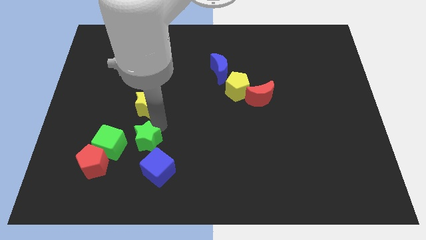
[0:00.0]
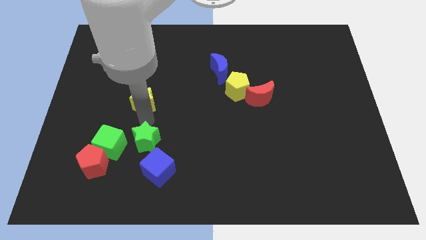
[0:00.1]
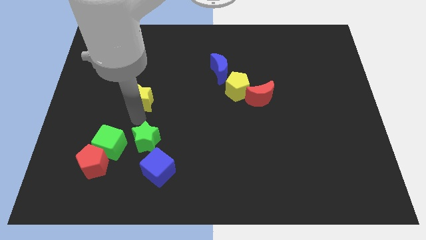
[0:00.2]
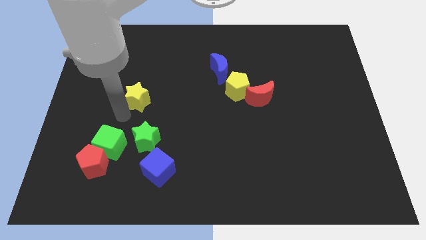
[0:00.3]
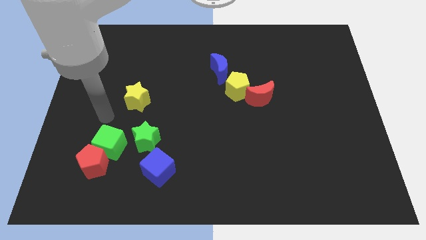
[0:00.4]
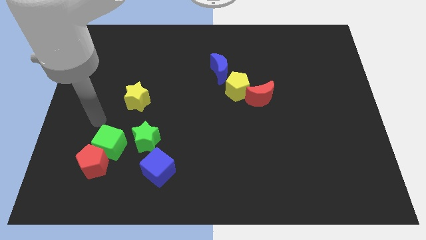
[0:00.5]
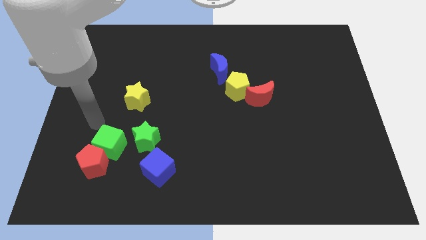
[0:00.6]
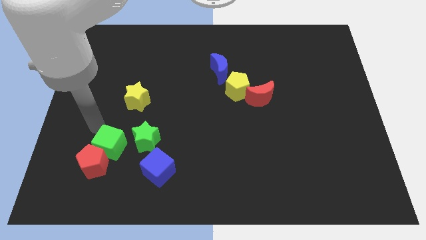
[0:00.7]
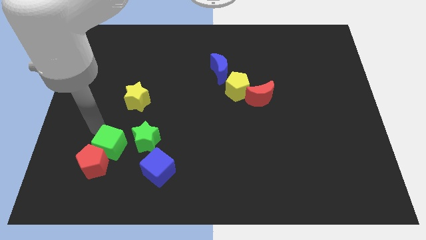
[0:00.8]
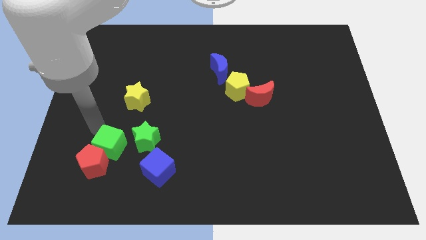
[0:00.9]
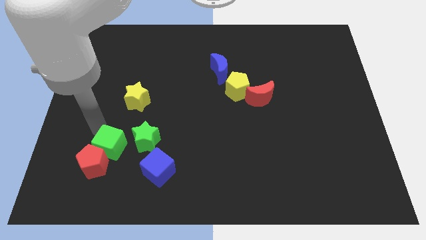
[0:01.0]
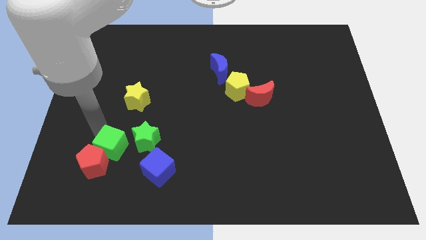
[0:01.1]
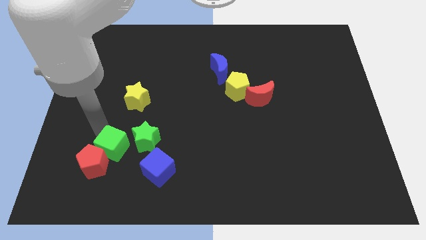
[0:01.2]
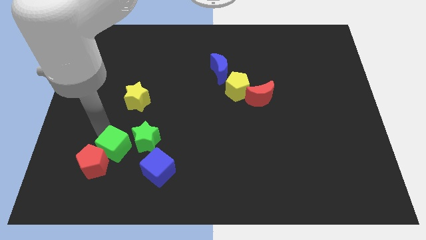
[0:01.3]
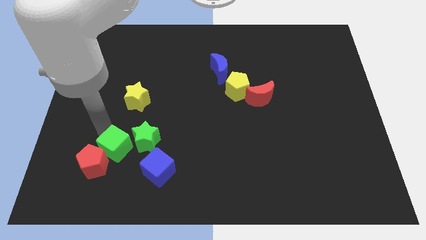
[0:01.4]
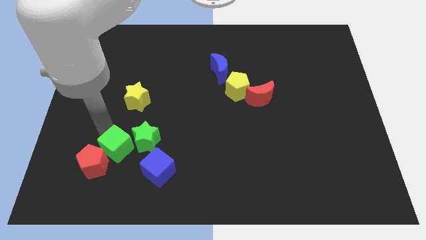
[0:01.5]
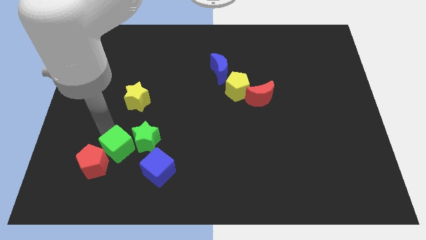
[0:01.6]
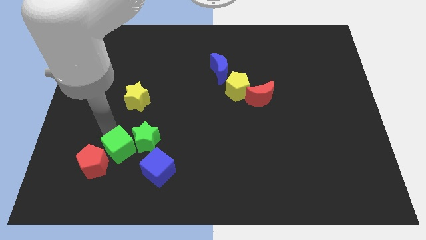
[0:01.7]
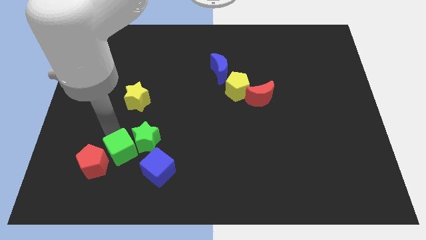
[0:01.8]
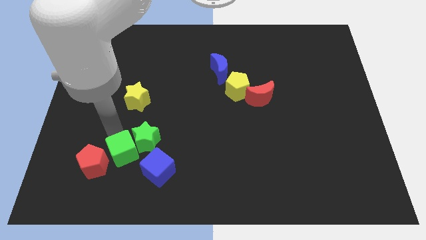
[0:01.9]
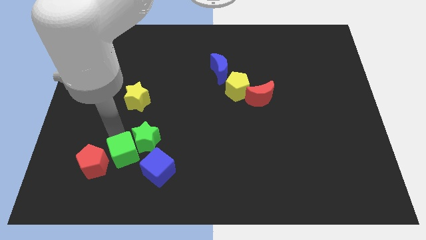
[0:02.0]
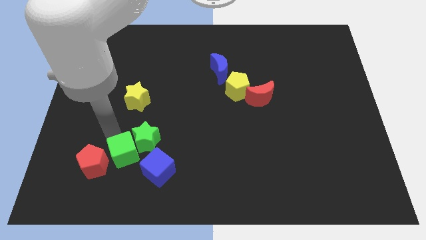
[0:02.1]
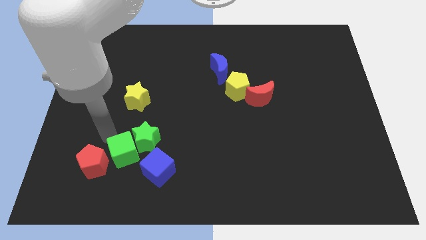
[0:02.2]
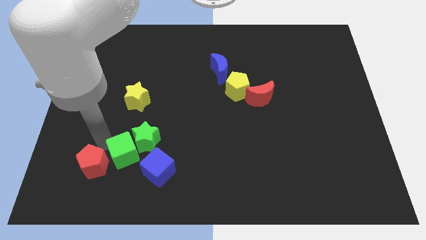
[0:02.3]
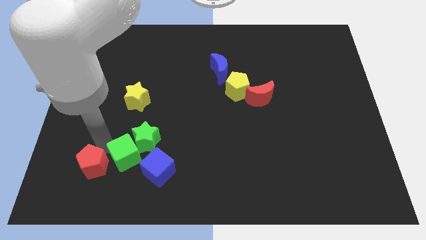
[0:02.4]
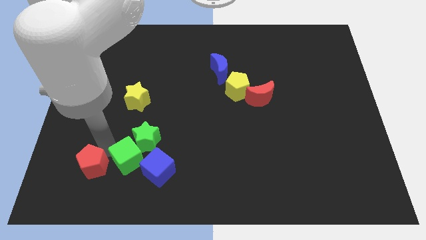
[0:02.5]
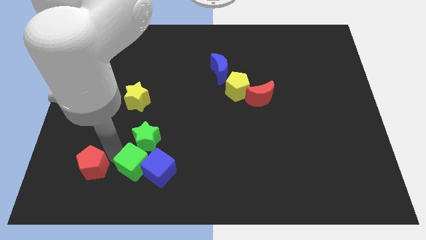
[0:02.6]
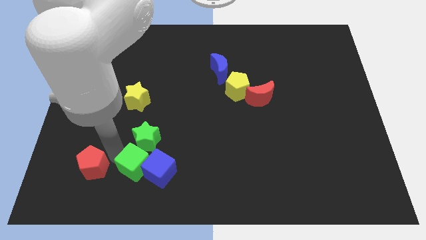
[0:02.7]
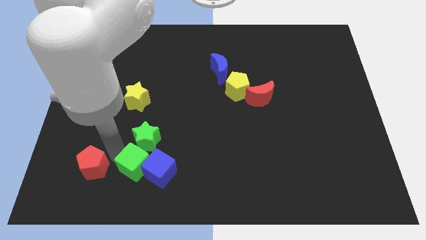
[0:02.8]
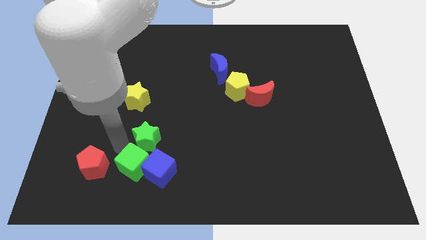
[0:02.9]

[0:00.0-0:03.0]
place green cube near to blue cube

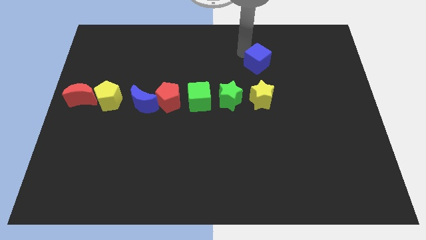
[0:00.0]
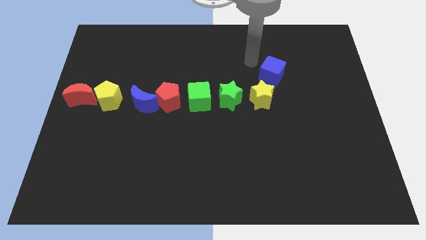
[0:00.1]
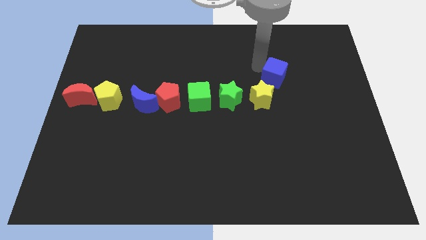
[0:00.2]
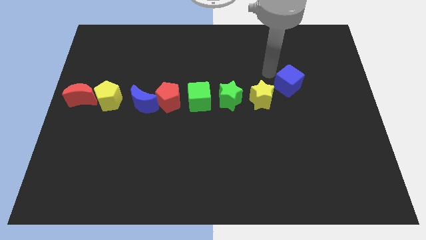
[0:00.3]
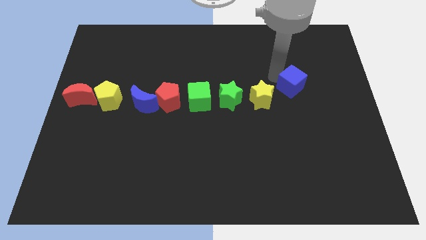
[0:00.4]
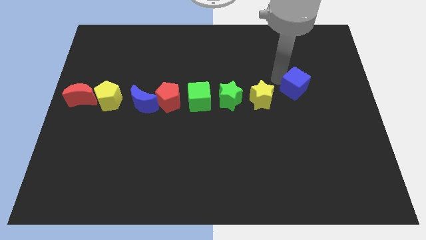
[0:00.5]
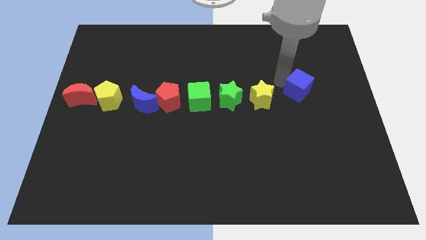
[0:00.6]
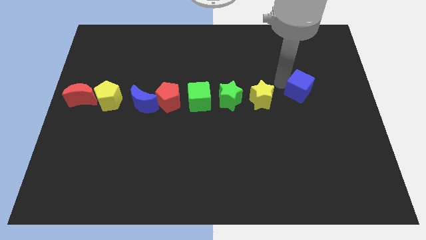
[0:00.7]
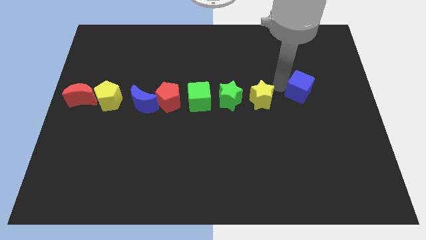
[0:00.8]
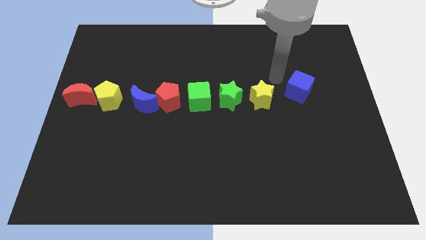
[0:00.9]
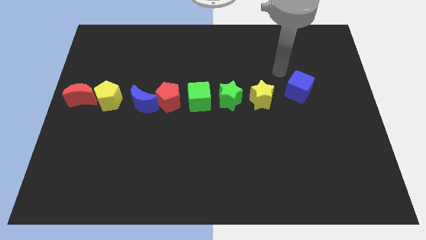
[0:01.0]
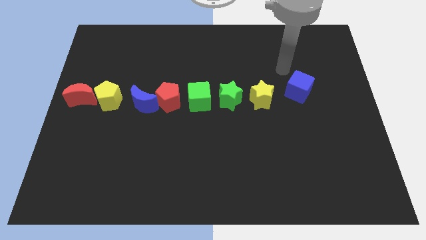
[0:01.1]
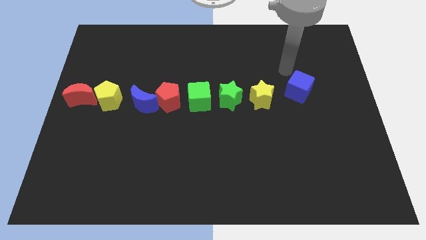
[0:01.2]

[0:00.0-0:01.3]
move the blue cube to the right of the yellow star

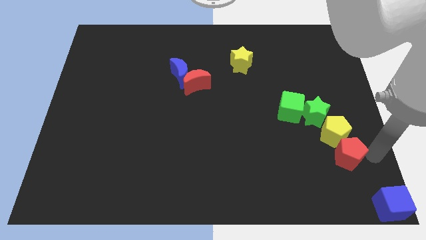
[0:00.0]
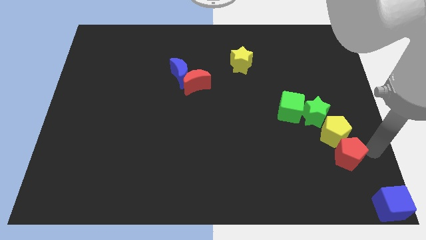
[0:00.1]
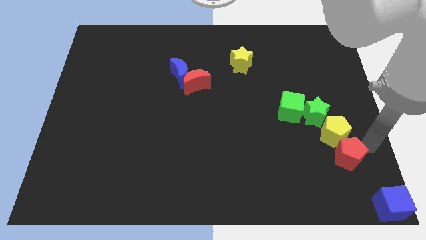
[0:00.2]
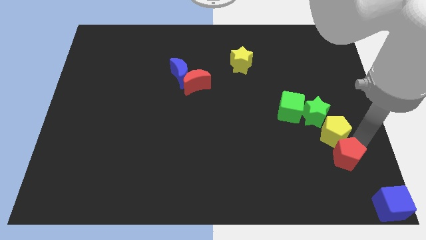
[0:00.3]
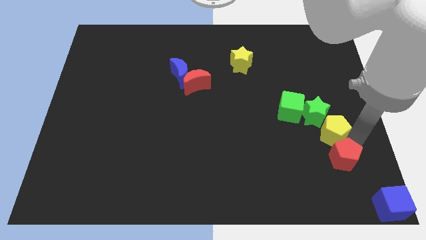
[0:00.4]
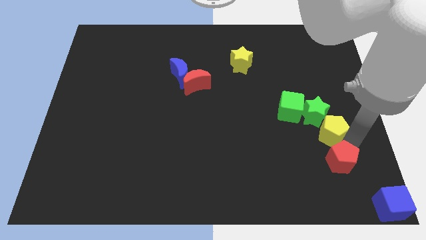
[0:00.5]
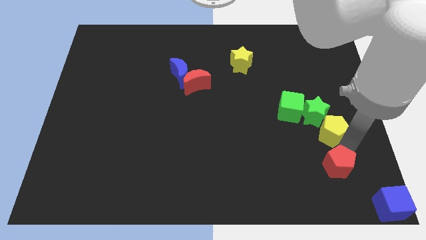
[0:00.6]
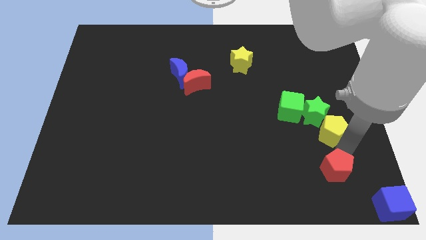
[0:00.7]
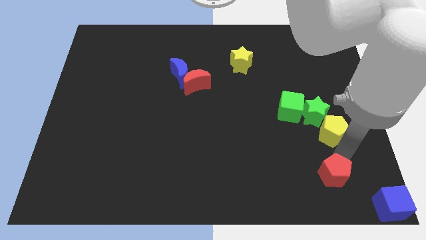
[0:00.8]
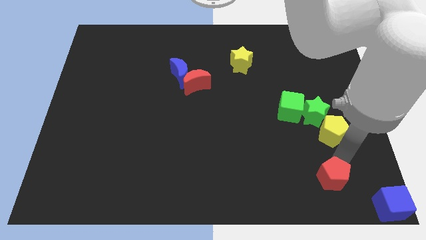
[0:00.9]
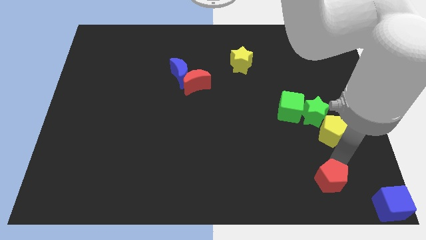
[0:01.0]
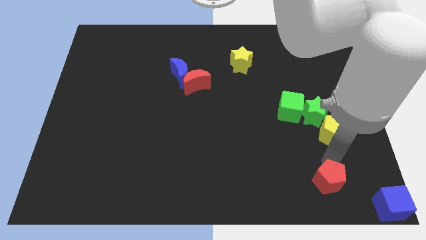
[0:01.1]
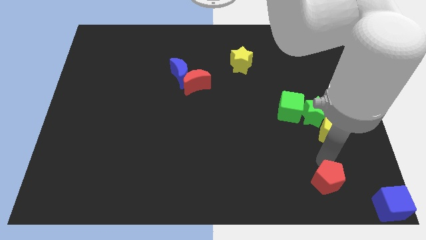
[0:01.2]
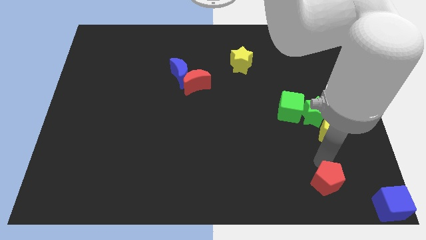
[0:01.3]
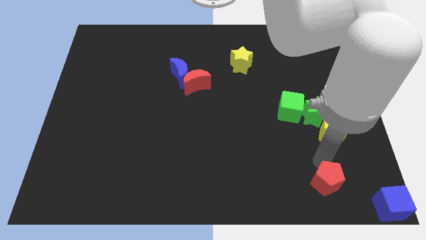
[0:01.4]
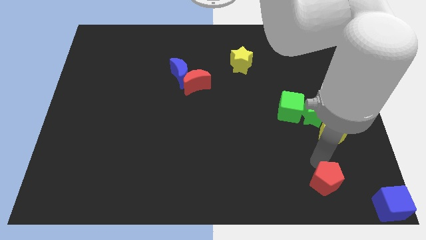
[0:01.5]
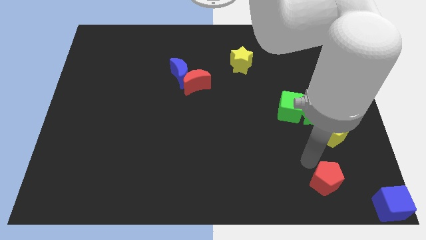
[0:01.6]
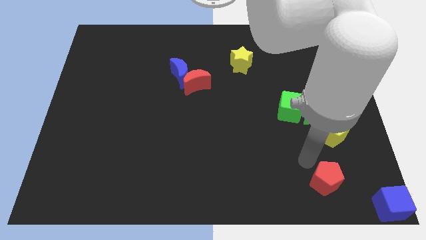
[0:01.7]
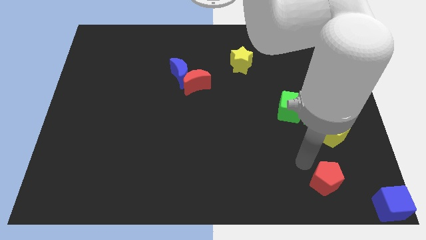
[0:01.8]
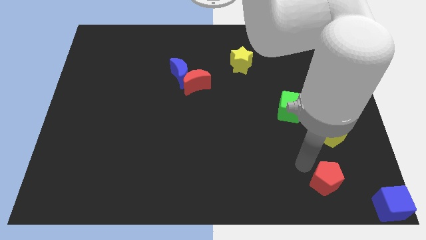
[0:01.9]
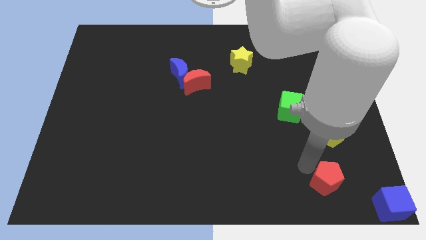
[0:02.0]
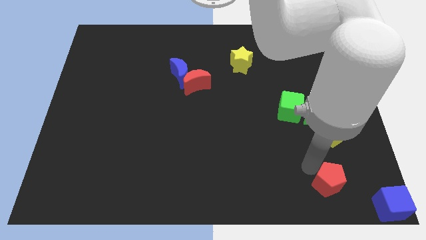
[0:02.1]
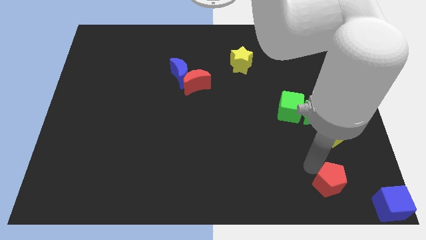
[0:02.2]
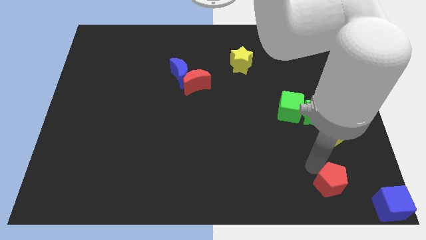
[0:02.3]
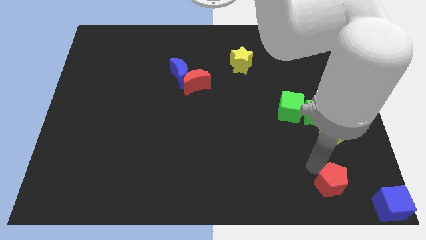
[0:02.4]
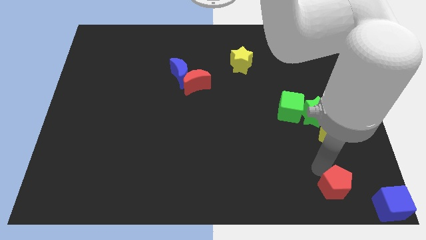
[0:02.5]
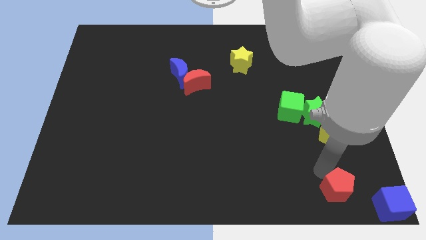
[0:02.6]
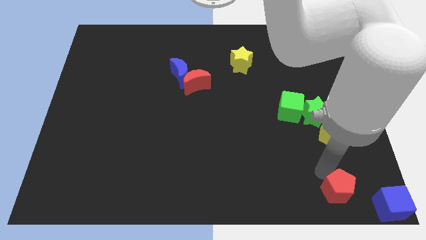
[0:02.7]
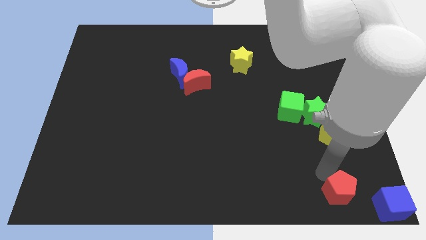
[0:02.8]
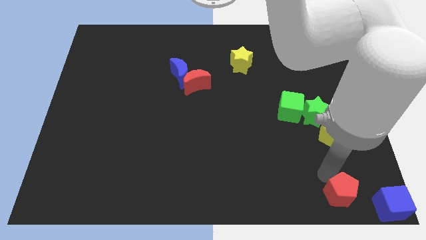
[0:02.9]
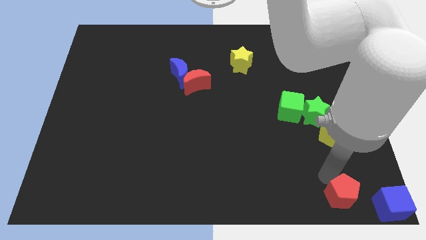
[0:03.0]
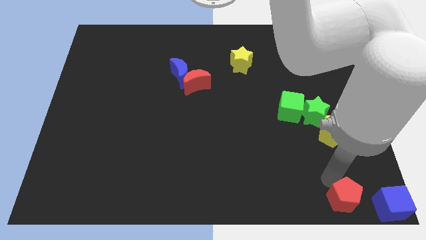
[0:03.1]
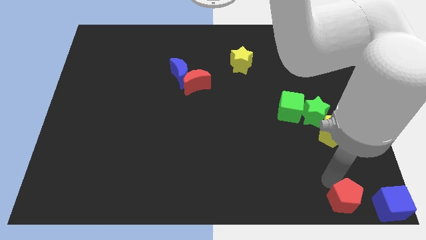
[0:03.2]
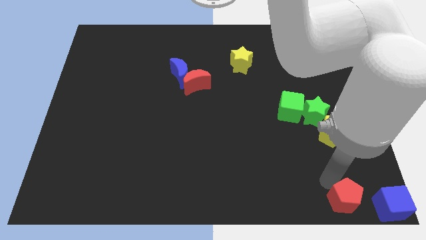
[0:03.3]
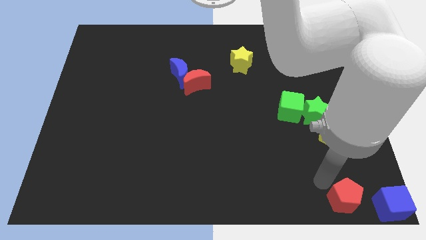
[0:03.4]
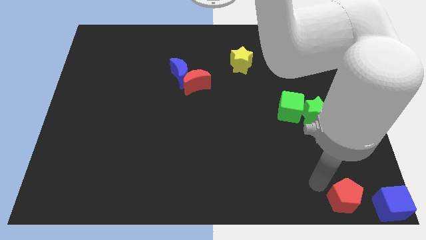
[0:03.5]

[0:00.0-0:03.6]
place the red pentagon below the yellow pentagon

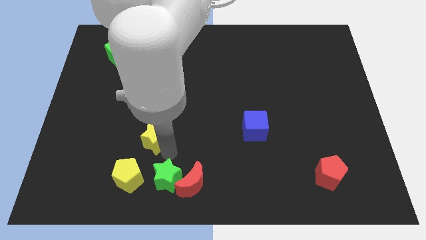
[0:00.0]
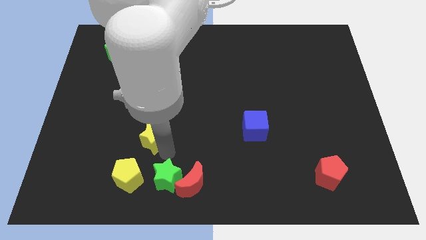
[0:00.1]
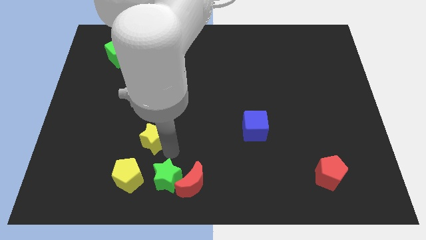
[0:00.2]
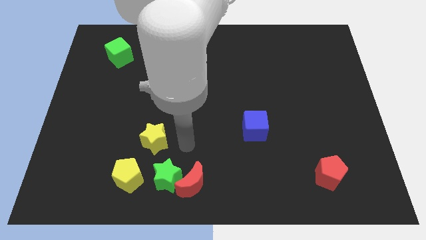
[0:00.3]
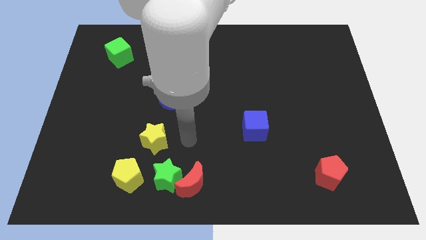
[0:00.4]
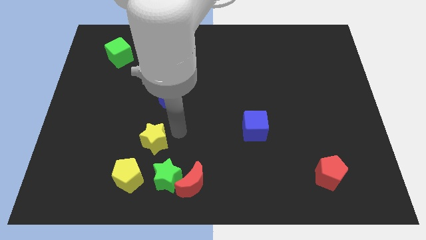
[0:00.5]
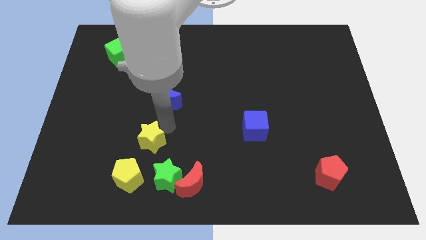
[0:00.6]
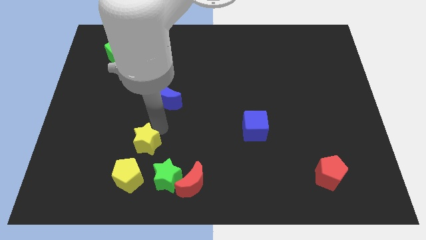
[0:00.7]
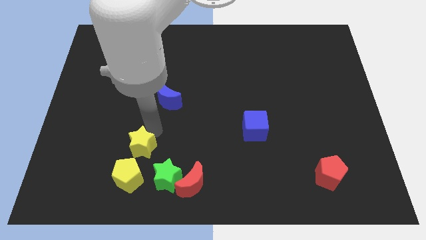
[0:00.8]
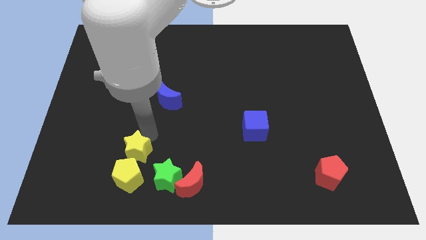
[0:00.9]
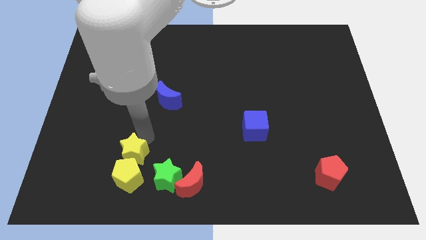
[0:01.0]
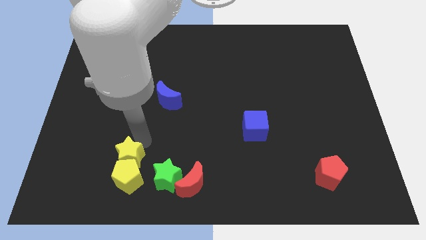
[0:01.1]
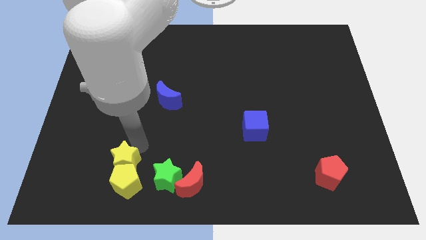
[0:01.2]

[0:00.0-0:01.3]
push the yellow star into the yellow pentagon
